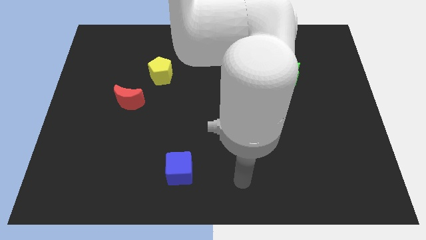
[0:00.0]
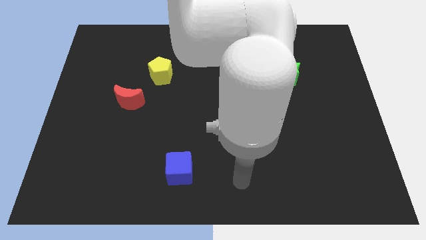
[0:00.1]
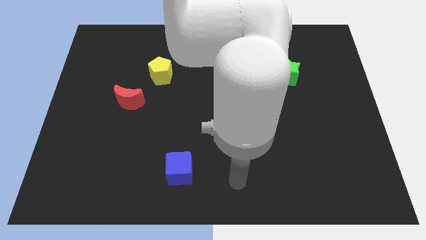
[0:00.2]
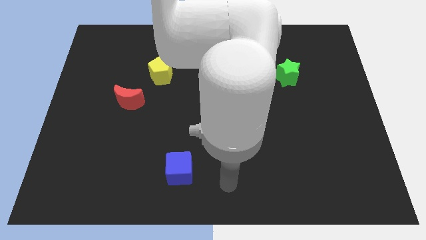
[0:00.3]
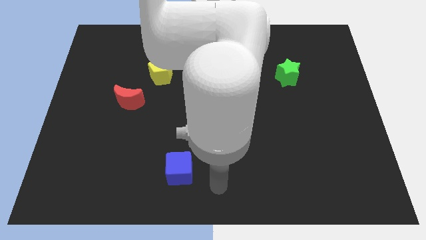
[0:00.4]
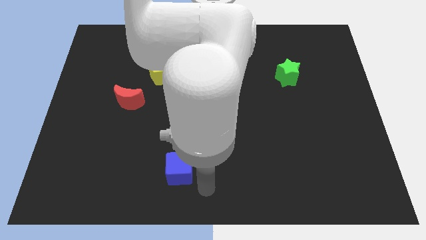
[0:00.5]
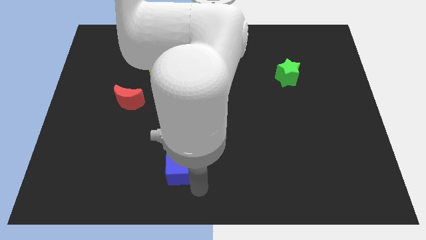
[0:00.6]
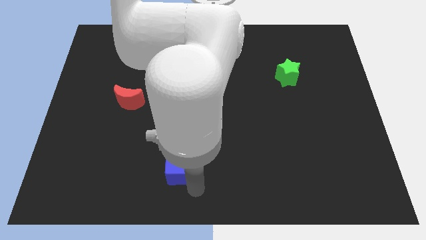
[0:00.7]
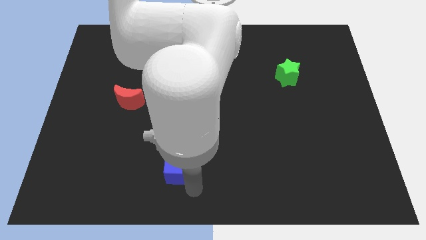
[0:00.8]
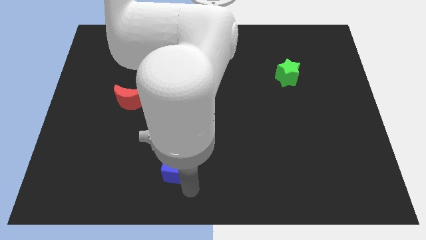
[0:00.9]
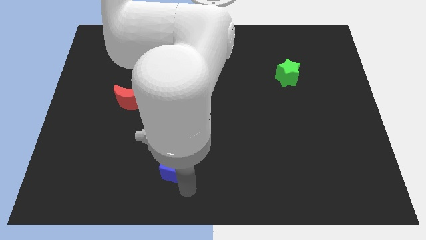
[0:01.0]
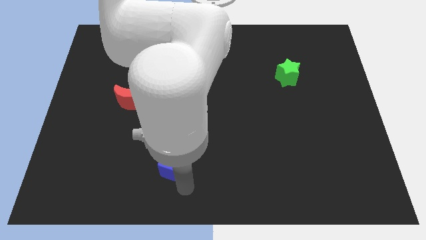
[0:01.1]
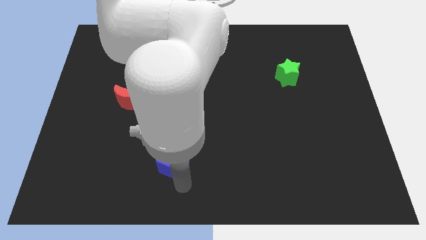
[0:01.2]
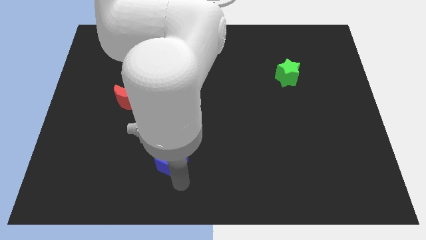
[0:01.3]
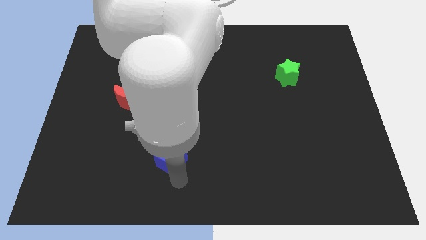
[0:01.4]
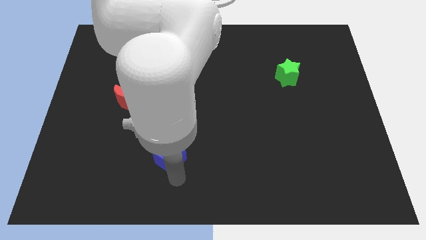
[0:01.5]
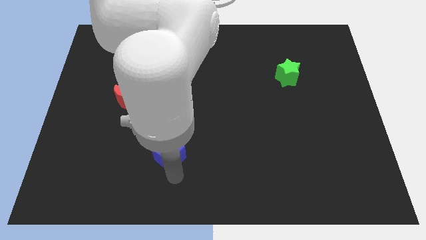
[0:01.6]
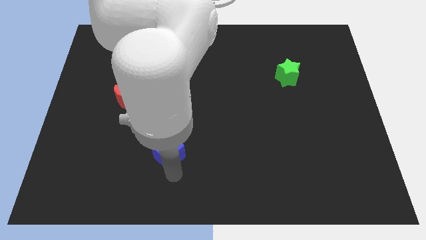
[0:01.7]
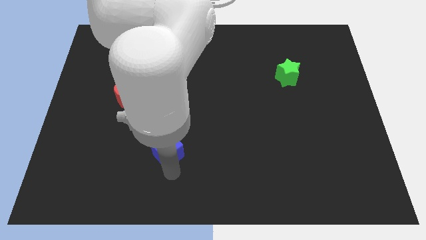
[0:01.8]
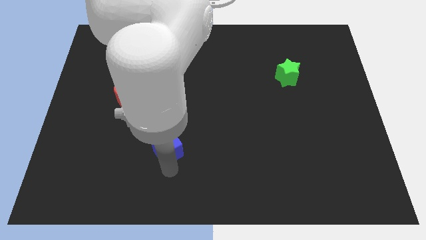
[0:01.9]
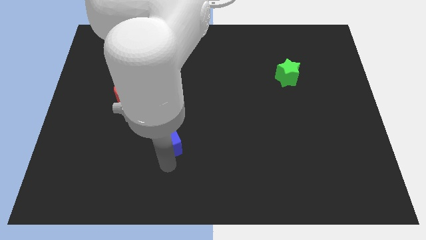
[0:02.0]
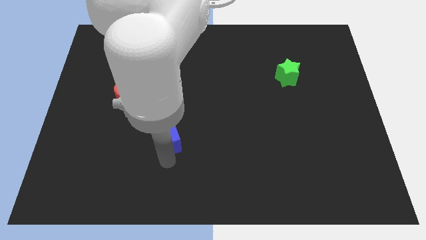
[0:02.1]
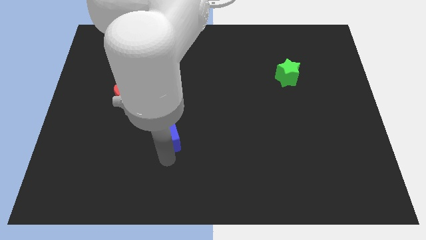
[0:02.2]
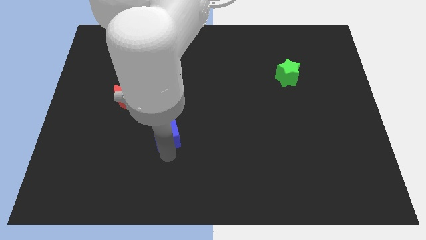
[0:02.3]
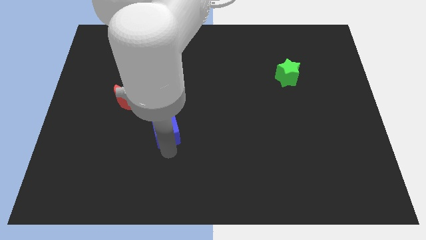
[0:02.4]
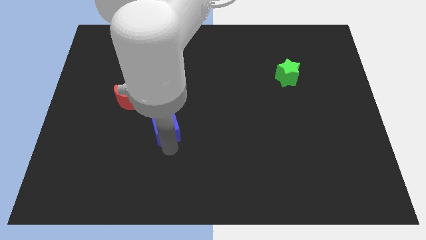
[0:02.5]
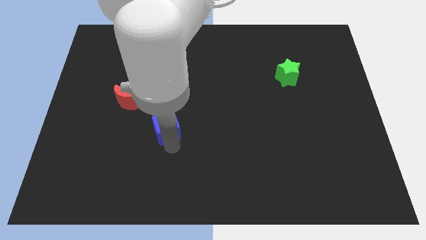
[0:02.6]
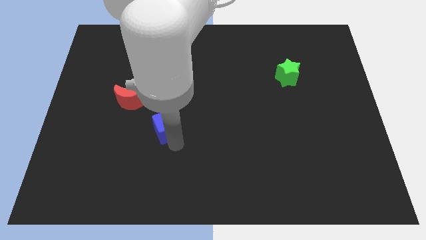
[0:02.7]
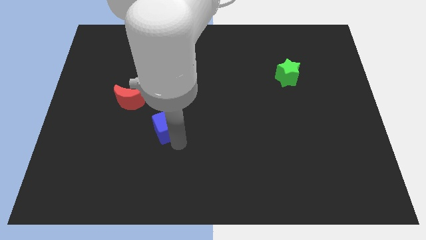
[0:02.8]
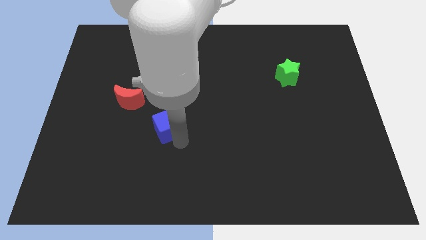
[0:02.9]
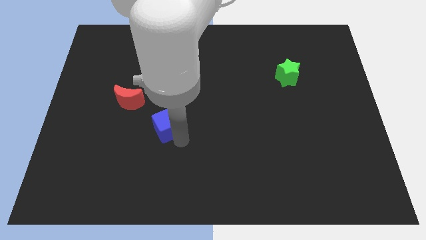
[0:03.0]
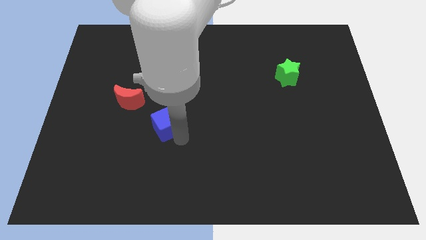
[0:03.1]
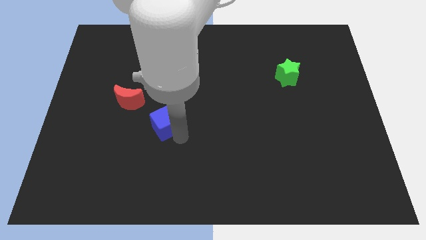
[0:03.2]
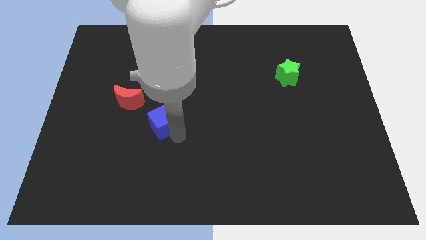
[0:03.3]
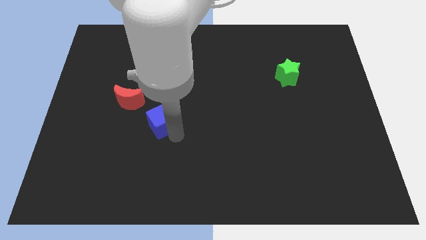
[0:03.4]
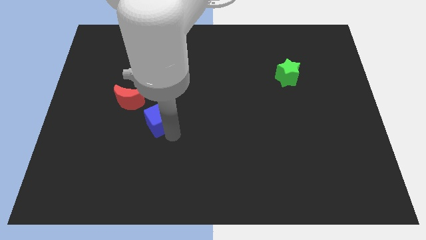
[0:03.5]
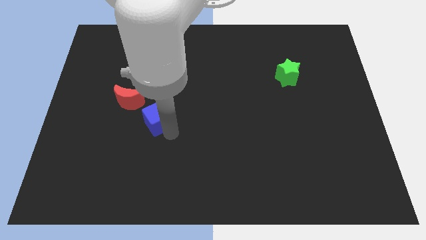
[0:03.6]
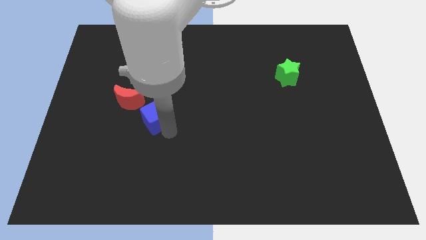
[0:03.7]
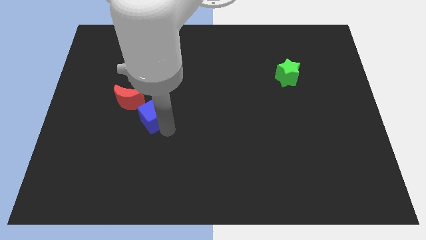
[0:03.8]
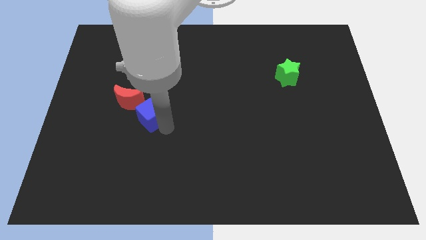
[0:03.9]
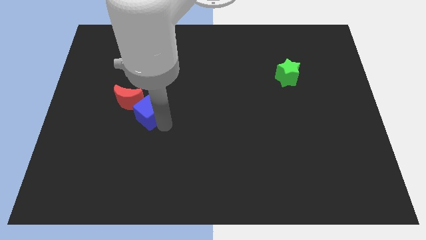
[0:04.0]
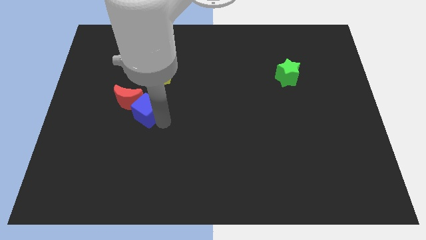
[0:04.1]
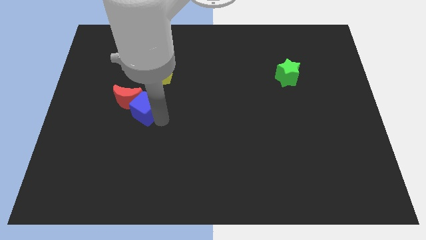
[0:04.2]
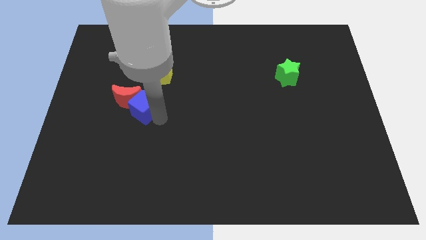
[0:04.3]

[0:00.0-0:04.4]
move the cube towards the moon

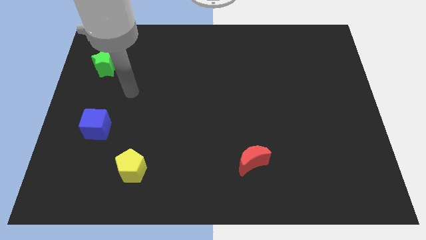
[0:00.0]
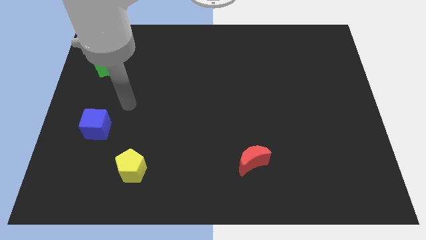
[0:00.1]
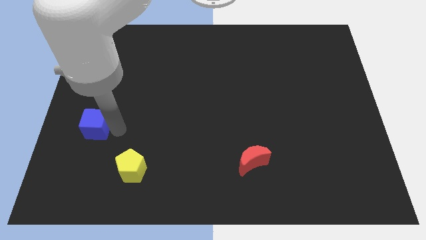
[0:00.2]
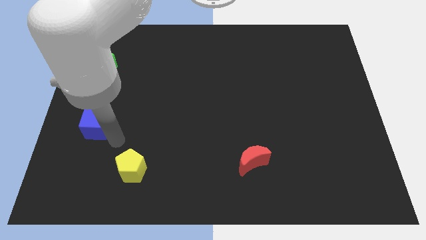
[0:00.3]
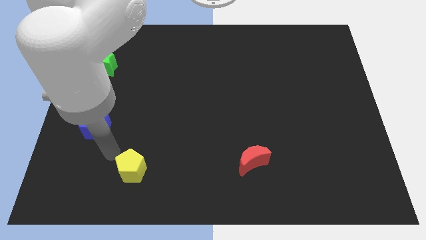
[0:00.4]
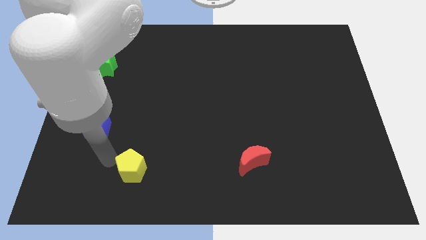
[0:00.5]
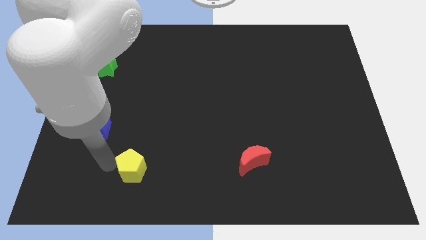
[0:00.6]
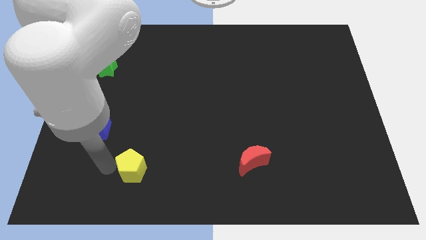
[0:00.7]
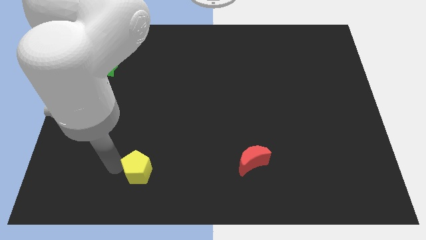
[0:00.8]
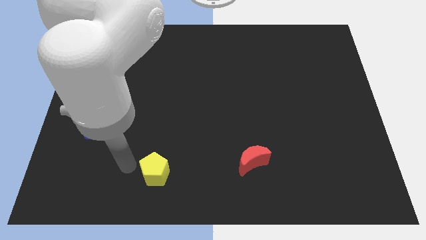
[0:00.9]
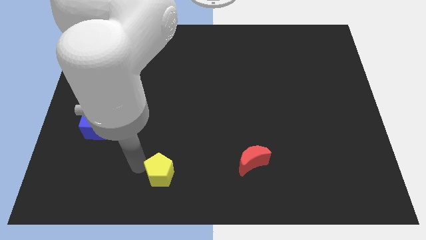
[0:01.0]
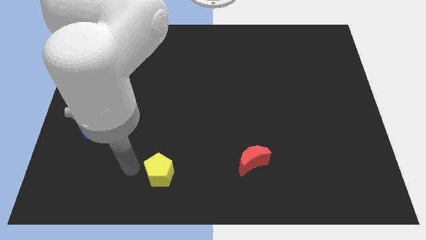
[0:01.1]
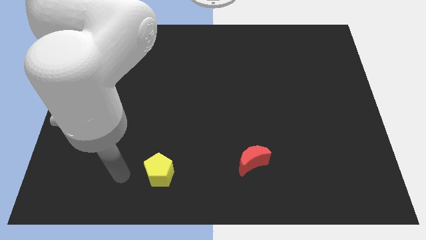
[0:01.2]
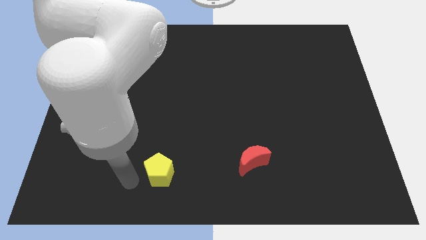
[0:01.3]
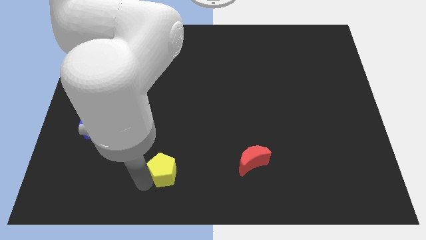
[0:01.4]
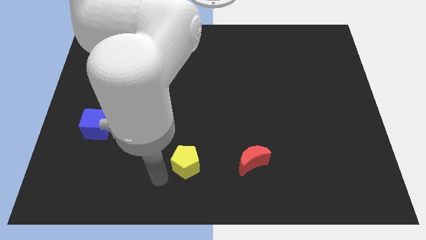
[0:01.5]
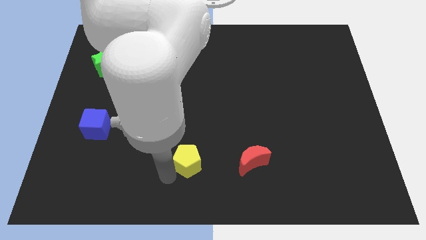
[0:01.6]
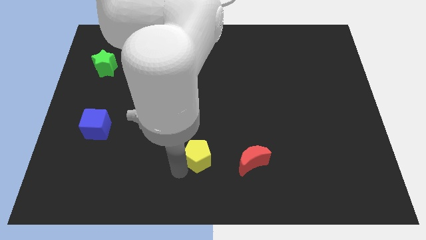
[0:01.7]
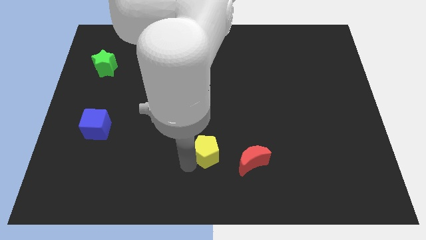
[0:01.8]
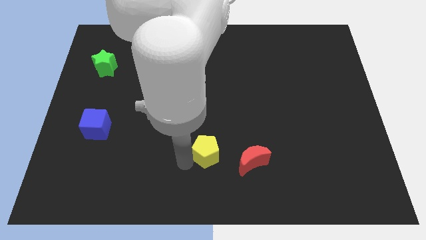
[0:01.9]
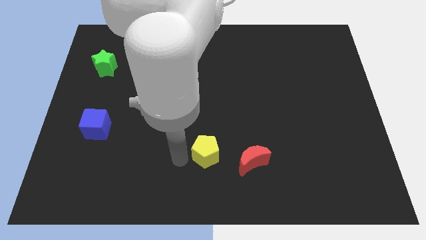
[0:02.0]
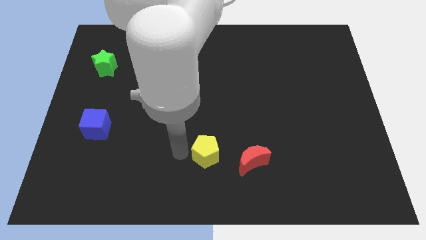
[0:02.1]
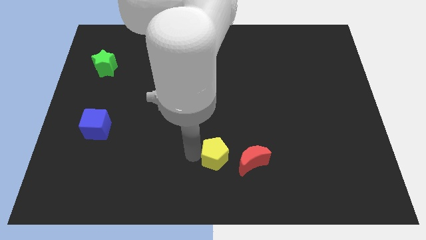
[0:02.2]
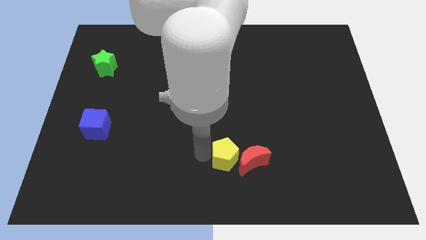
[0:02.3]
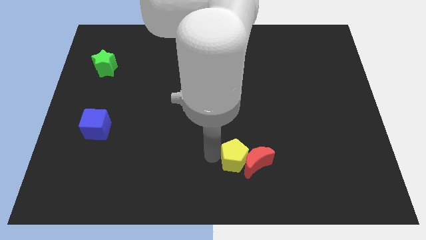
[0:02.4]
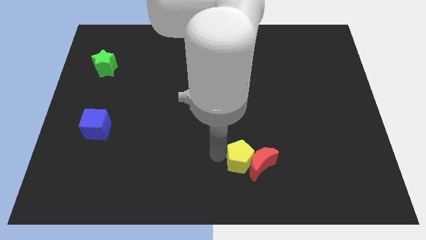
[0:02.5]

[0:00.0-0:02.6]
move the yellow pentagon next to the red moon

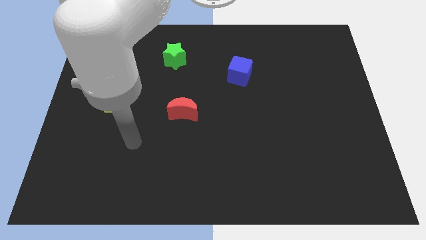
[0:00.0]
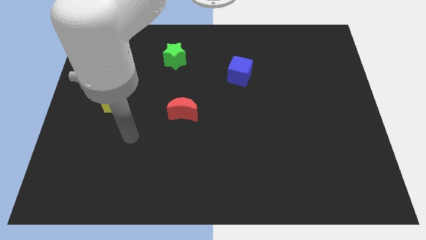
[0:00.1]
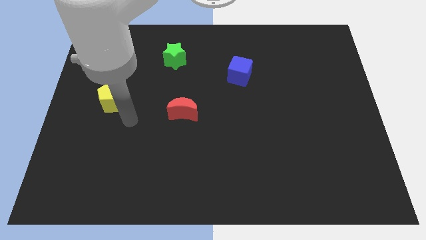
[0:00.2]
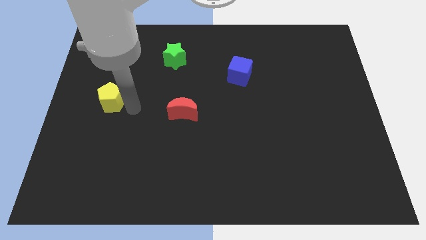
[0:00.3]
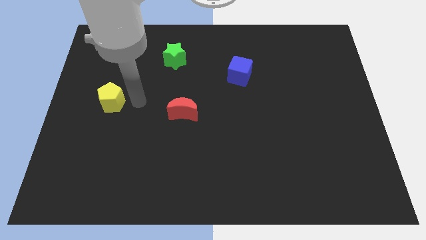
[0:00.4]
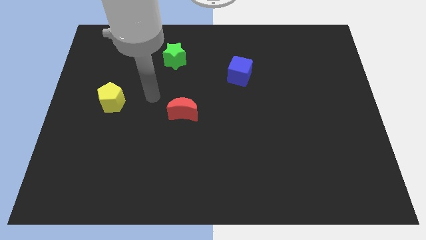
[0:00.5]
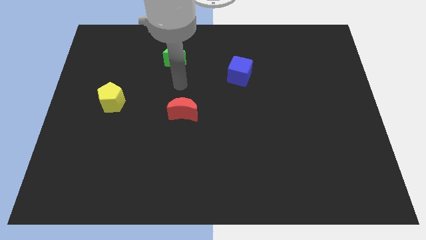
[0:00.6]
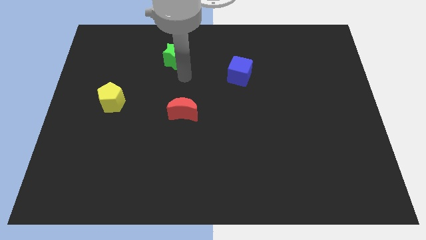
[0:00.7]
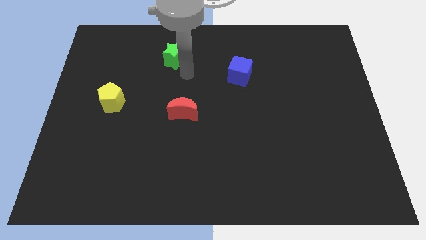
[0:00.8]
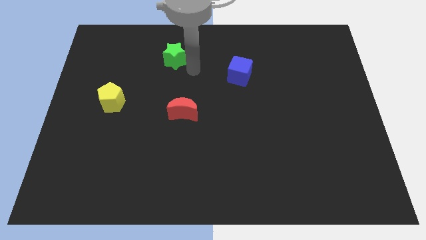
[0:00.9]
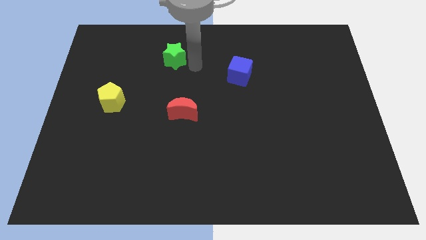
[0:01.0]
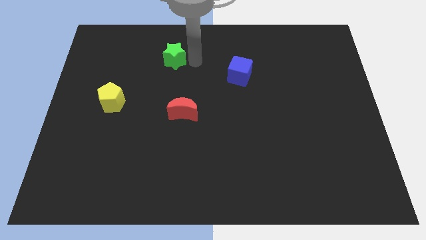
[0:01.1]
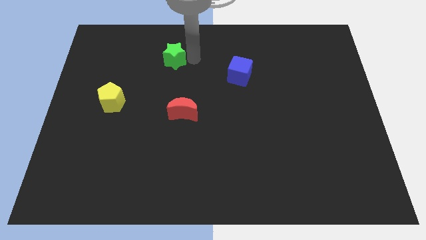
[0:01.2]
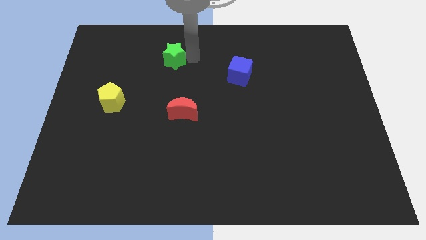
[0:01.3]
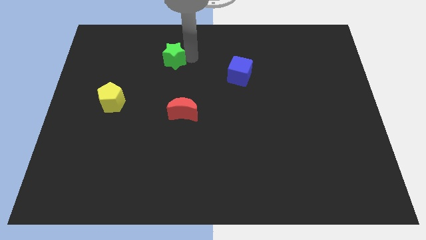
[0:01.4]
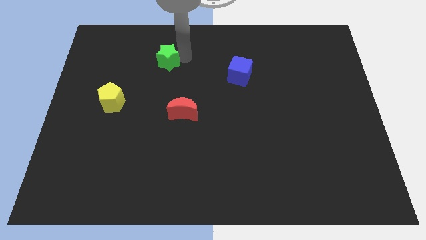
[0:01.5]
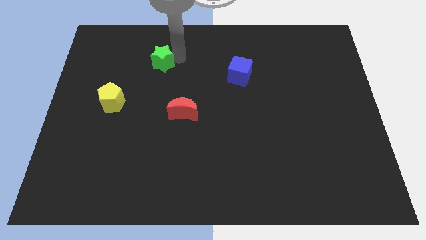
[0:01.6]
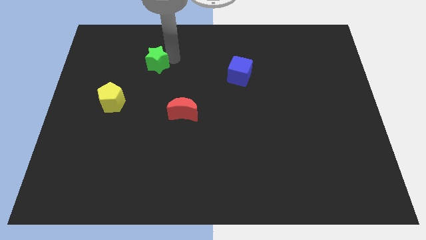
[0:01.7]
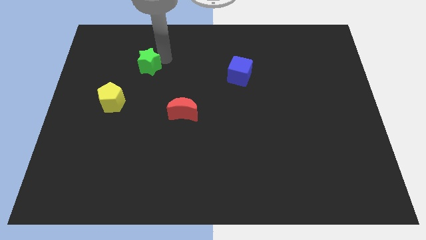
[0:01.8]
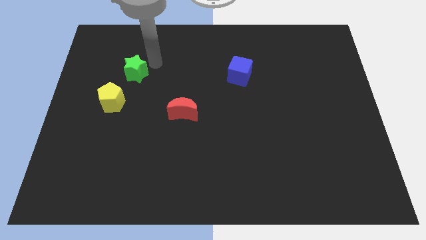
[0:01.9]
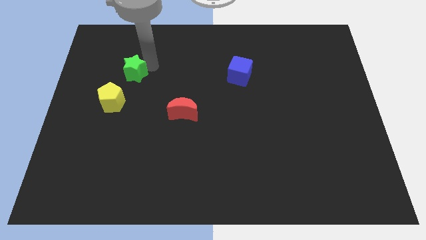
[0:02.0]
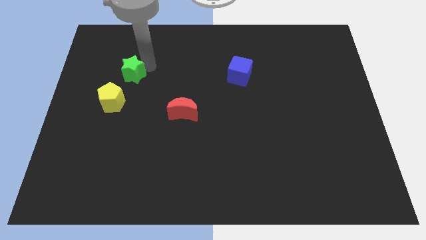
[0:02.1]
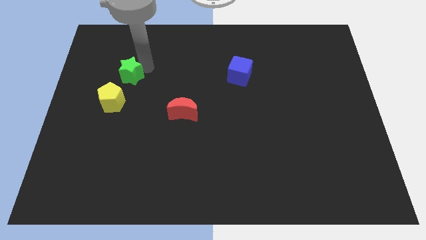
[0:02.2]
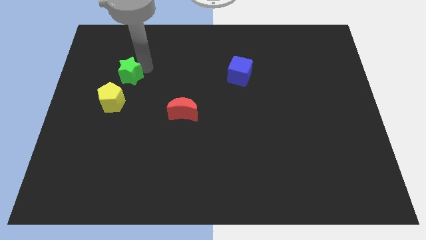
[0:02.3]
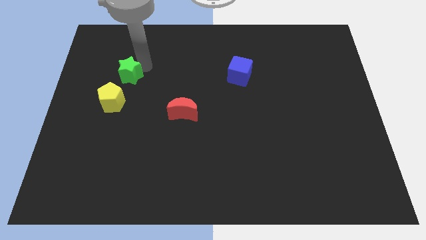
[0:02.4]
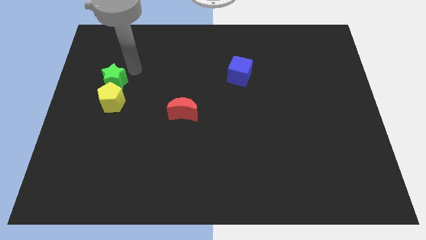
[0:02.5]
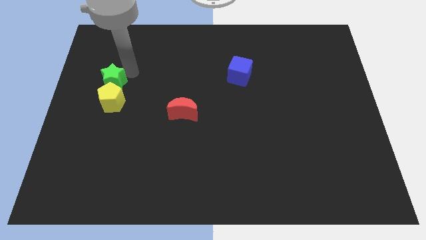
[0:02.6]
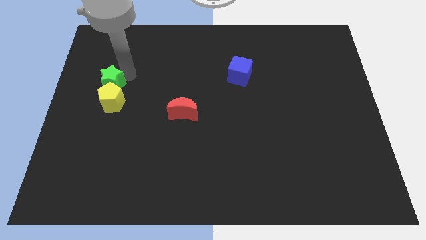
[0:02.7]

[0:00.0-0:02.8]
push the green star next to the yellow block
